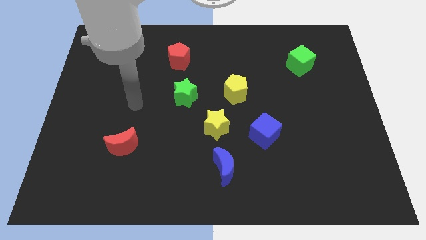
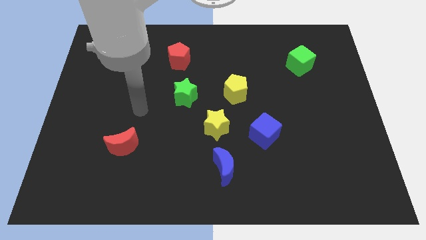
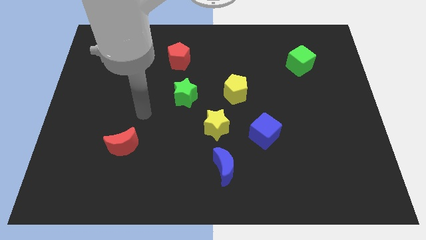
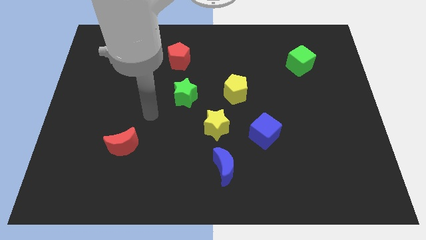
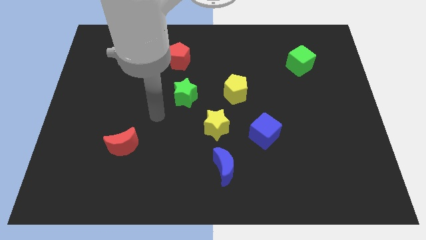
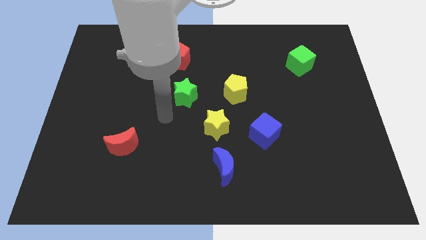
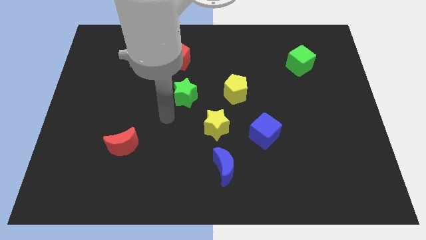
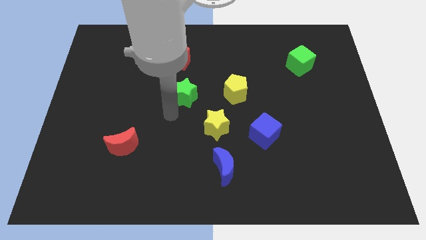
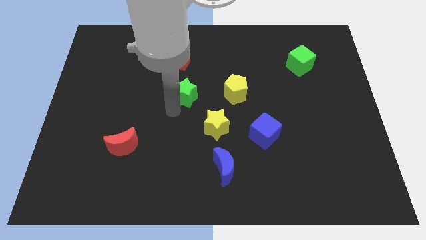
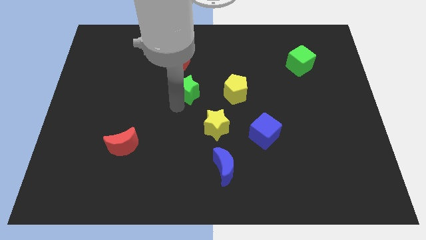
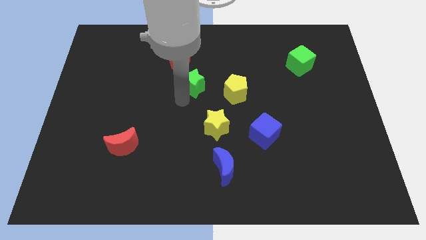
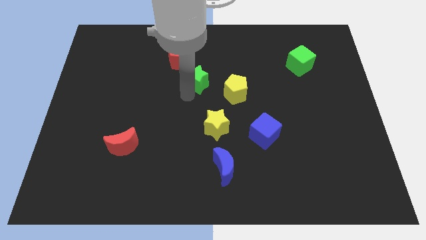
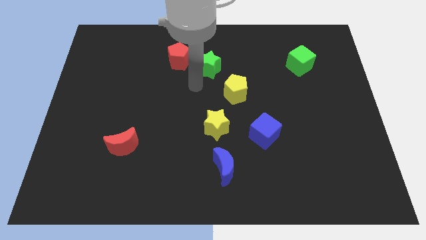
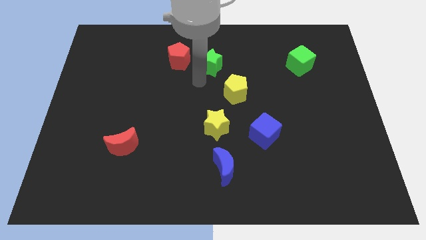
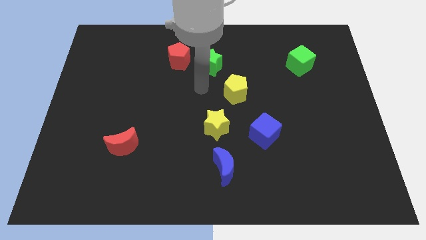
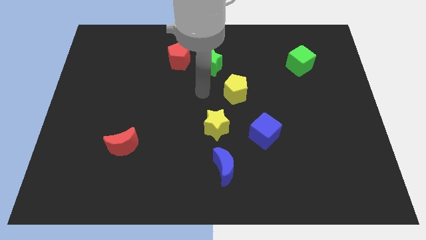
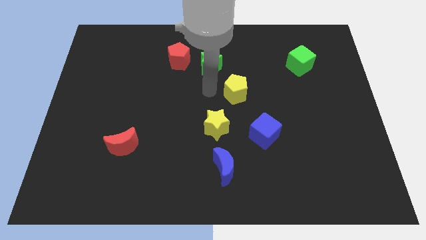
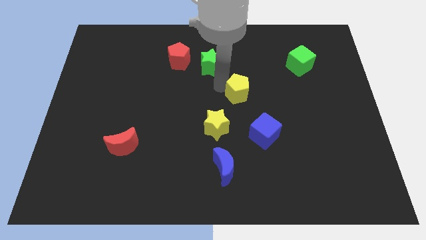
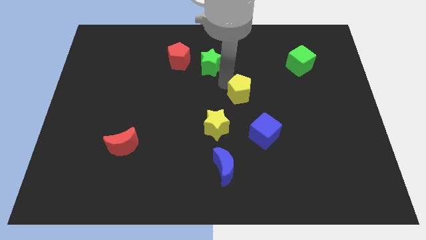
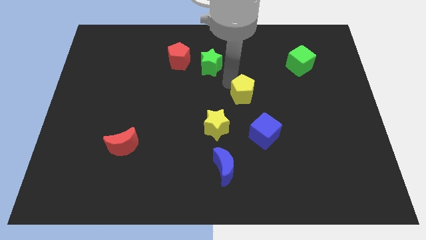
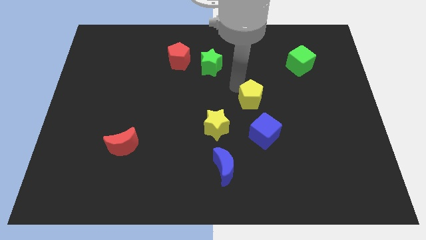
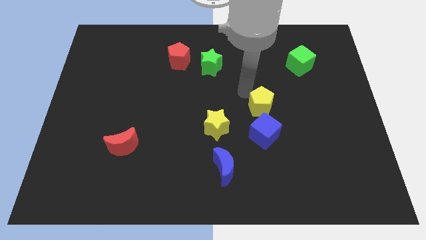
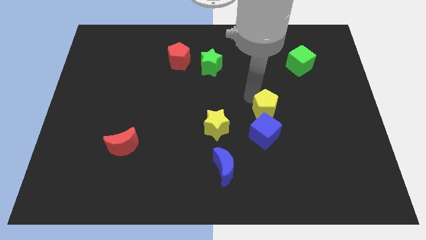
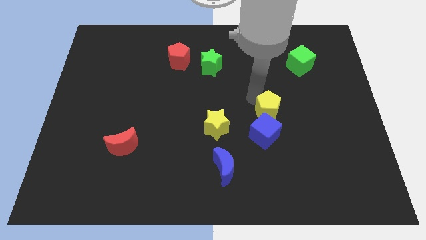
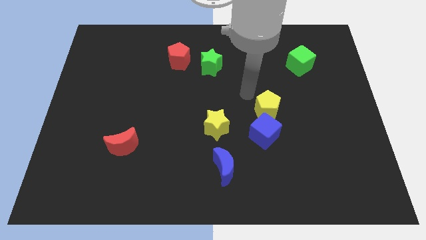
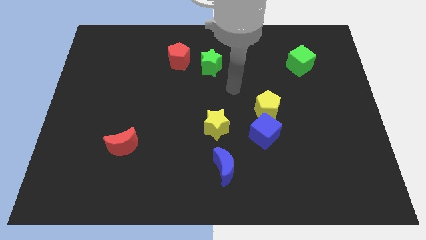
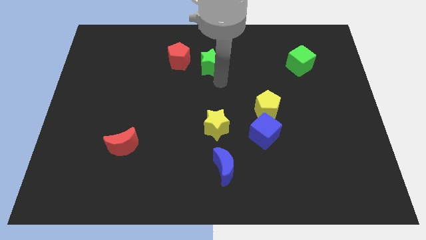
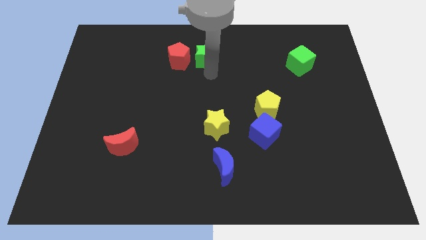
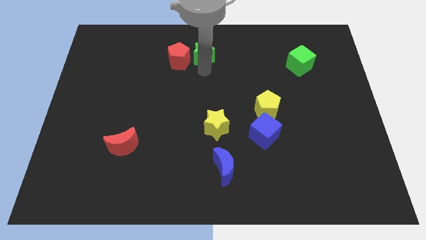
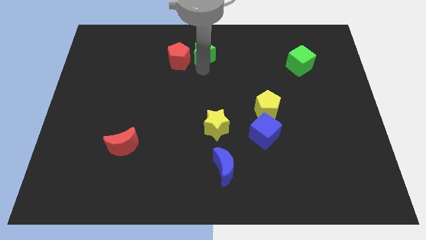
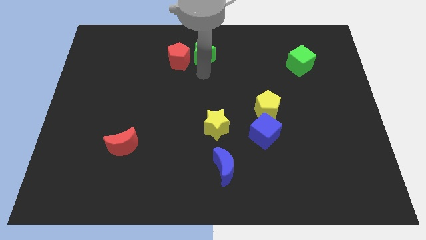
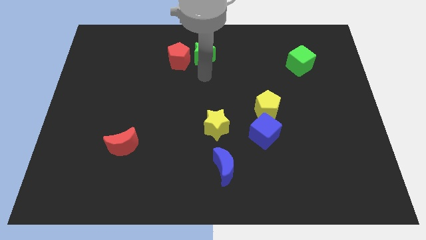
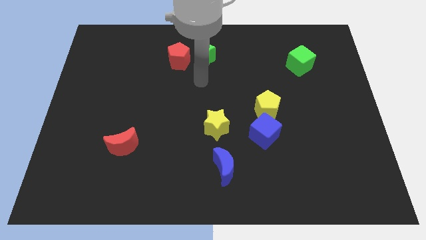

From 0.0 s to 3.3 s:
push the green star upward

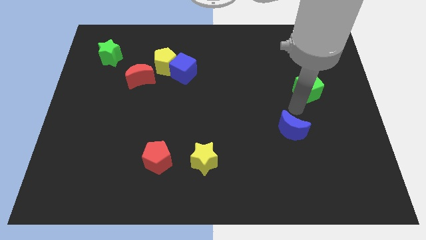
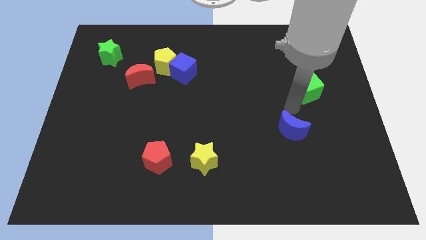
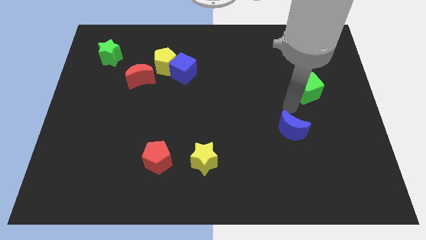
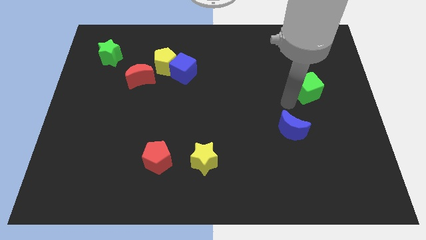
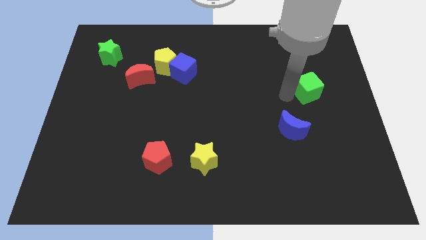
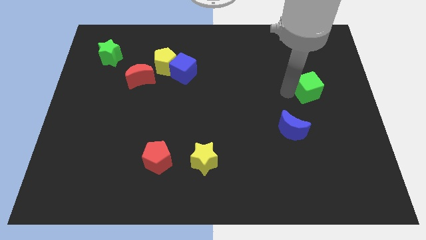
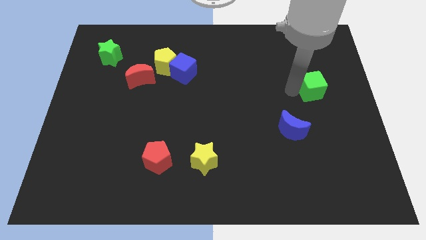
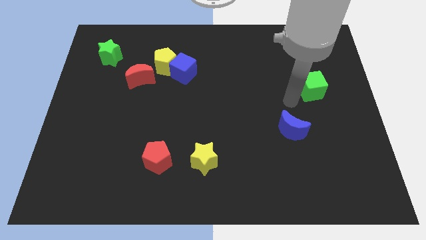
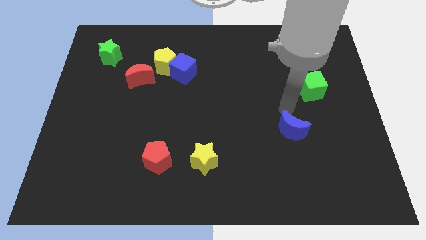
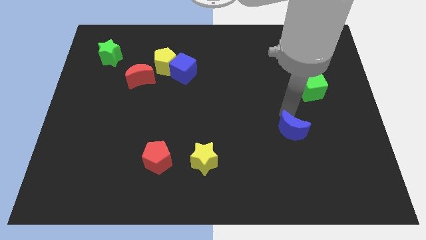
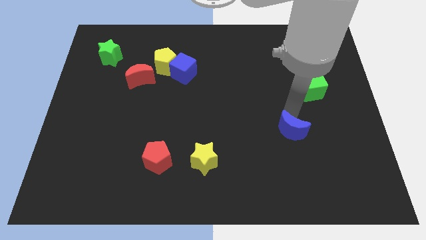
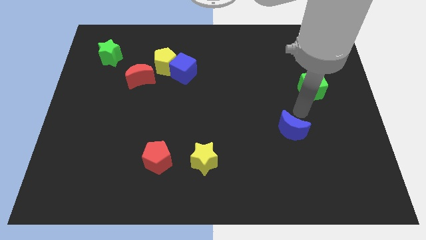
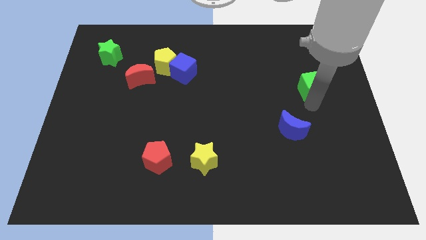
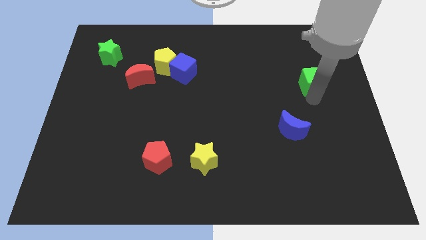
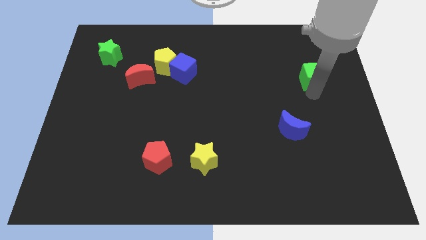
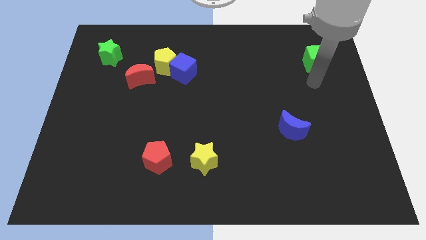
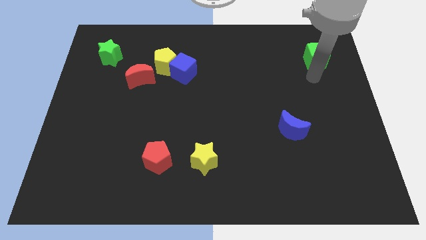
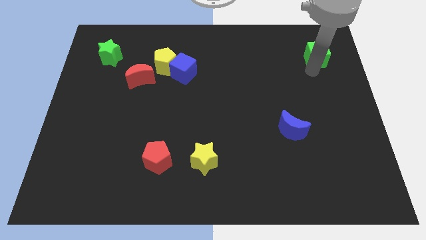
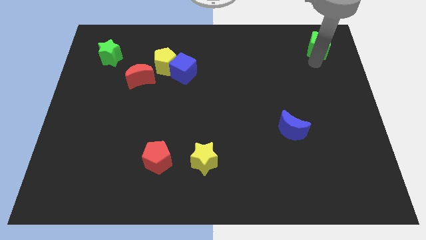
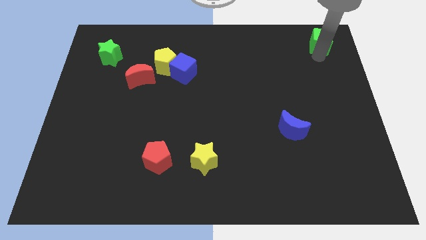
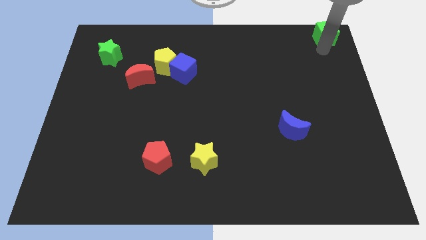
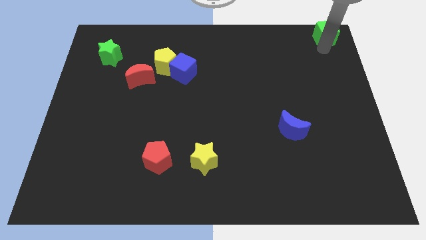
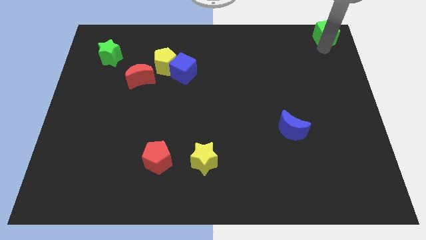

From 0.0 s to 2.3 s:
push the green cube to the top right side

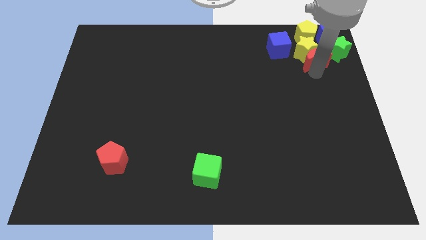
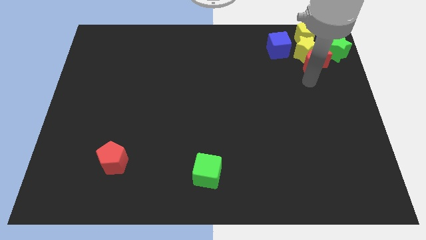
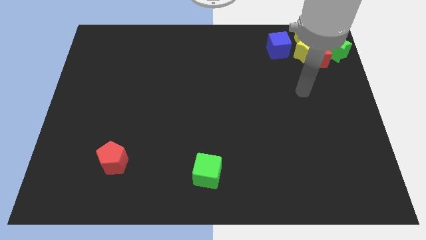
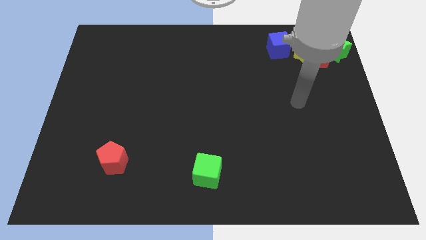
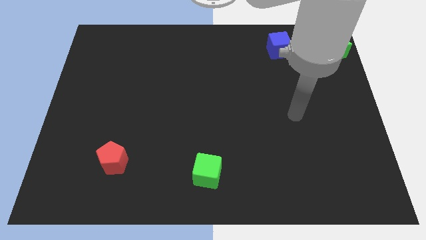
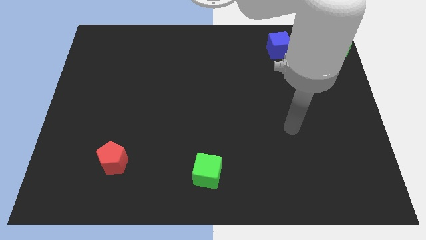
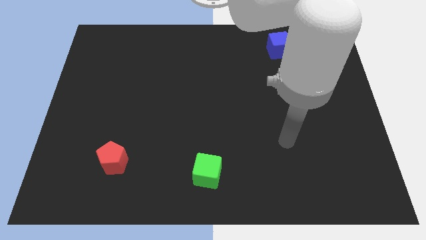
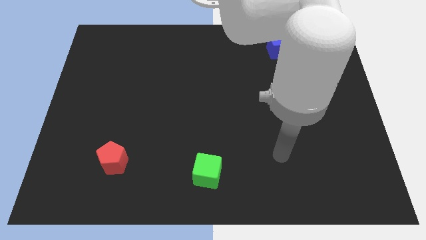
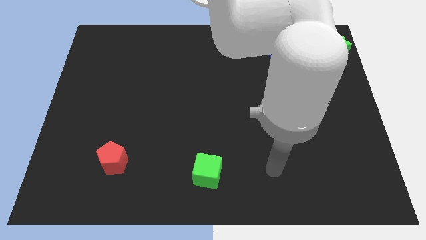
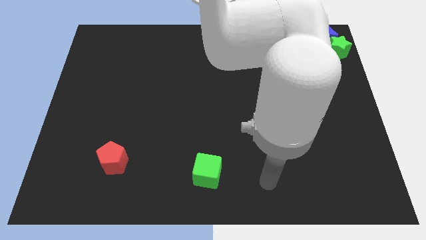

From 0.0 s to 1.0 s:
move the arm away from the red moon

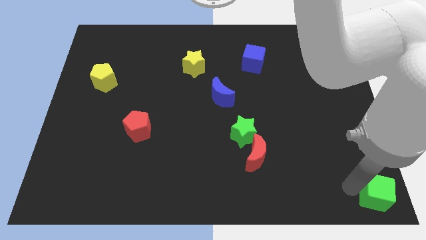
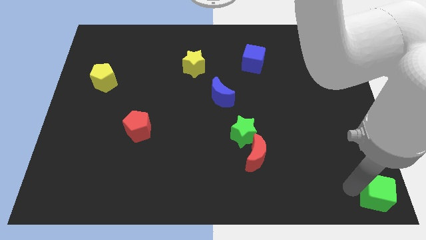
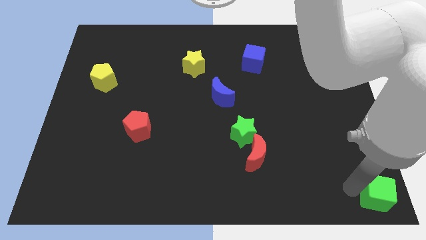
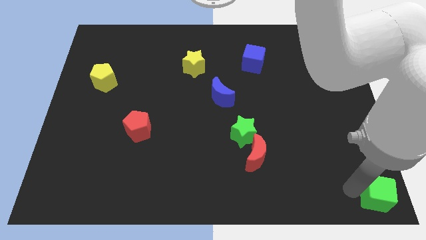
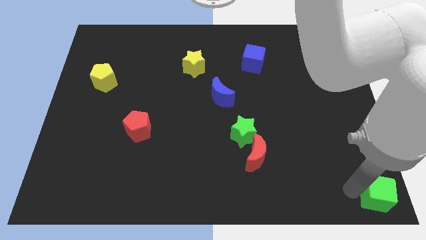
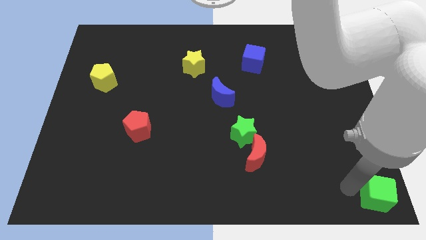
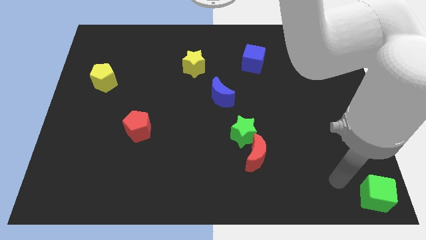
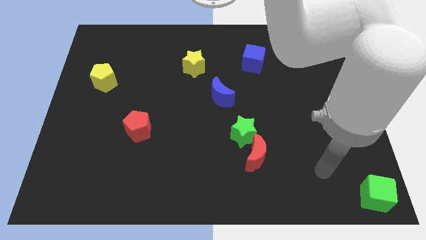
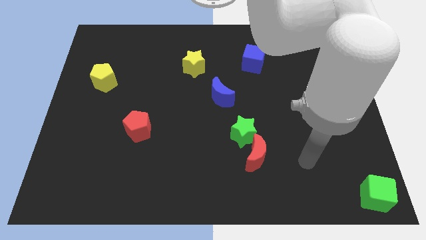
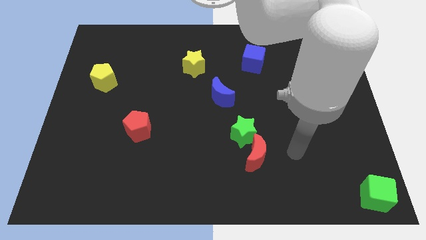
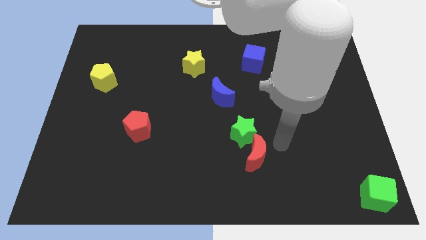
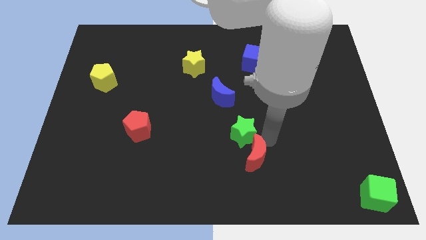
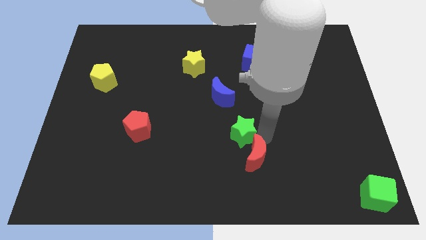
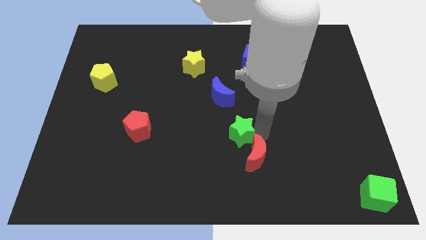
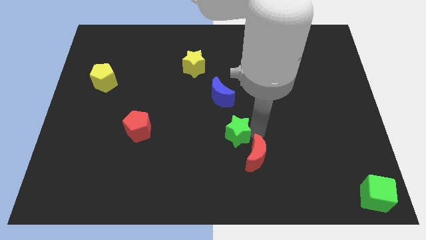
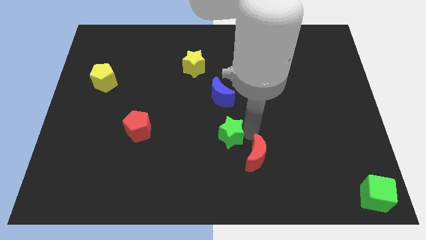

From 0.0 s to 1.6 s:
touch the right bottom of the green star

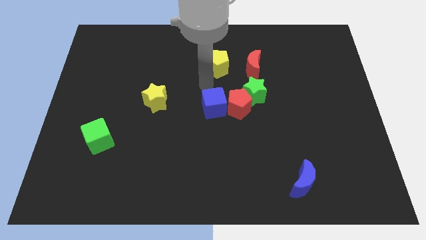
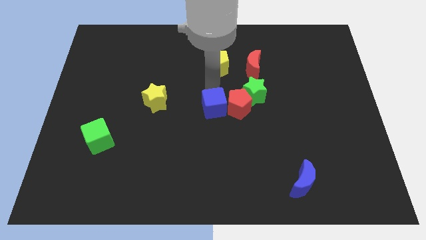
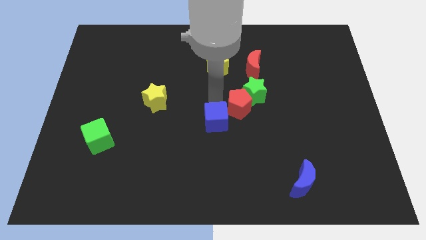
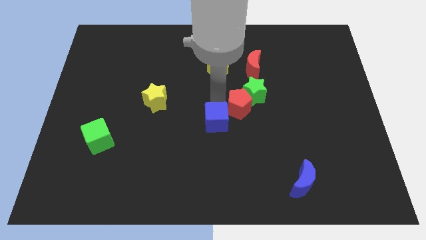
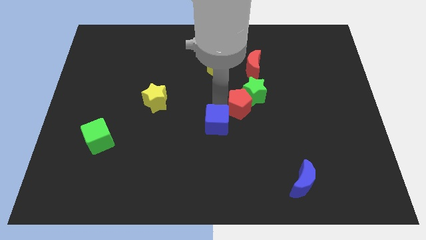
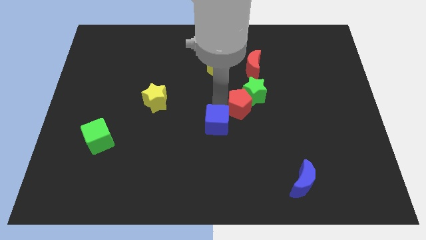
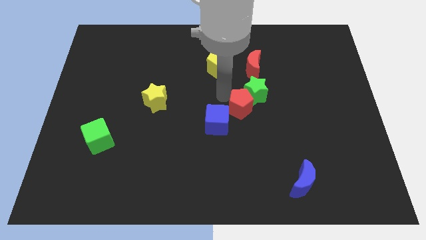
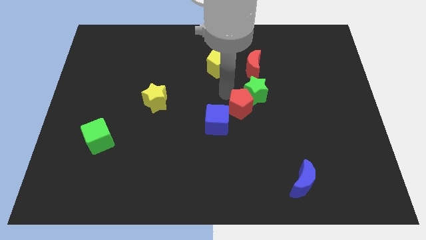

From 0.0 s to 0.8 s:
push blue cube slightly downwards

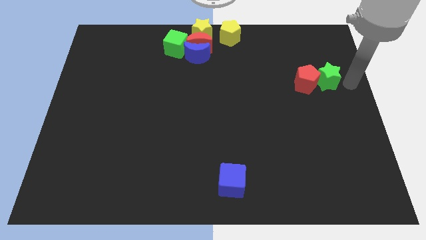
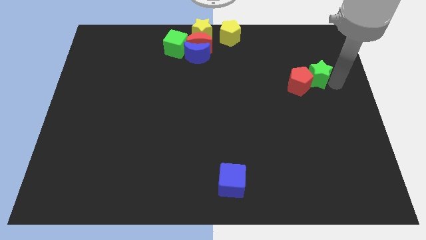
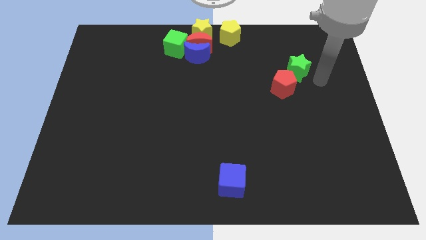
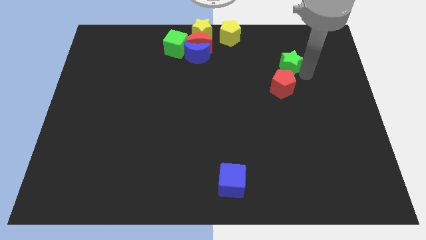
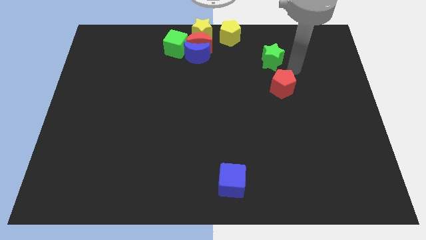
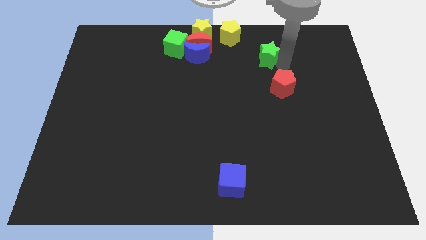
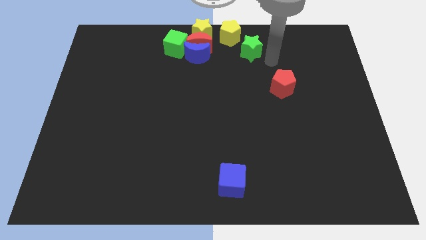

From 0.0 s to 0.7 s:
separate the green star from the red pentagon
